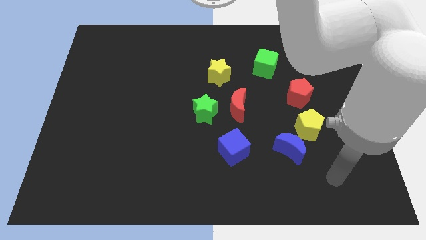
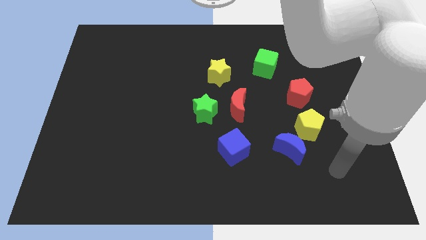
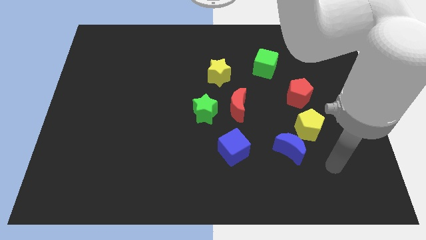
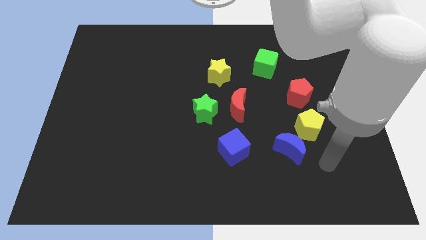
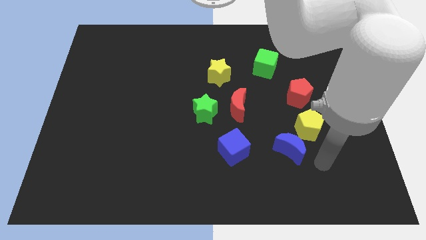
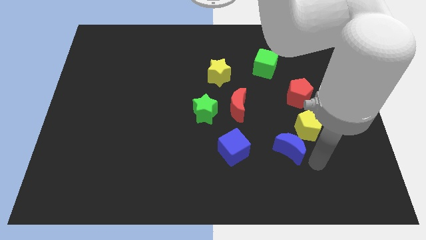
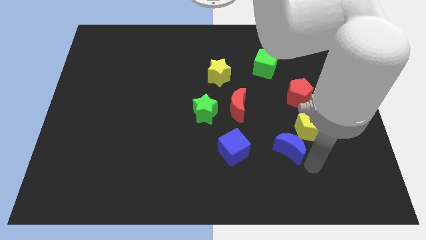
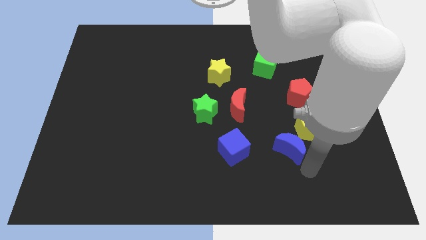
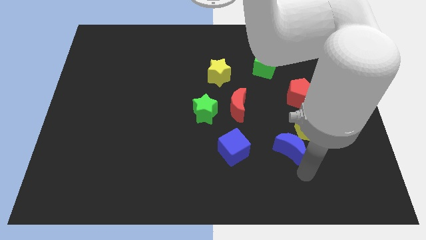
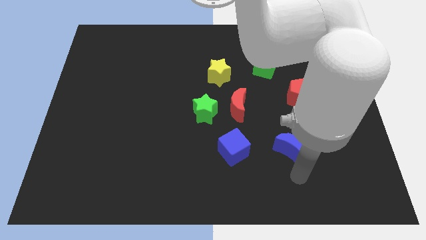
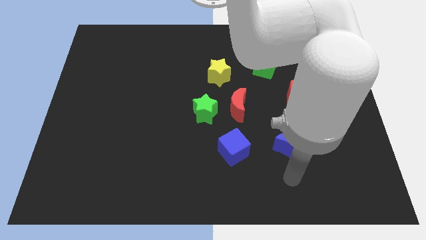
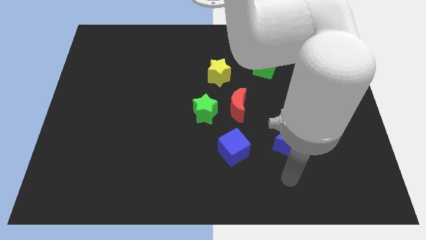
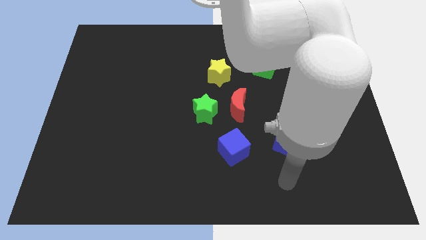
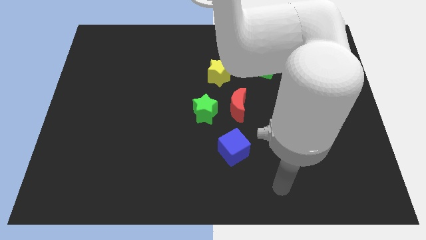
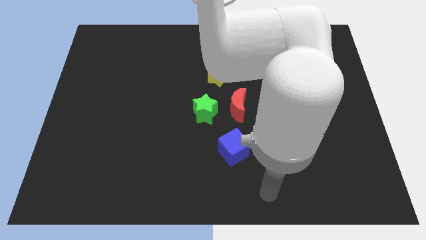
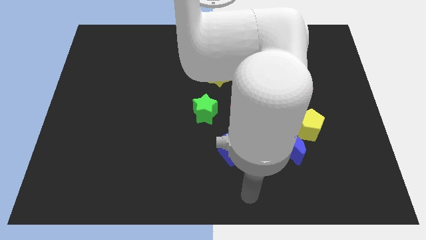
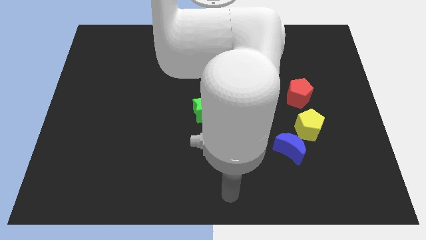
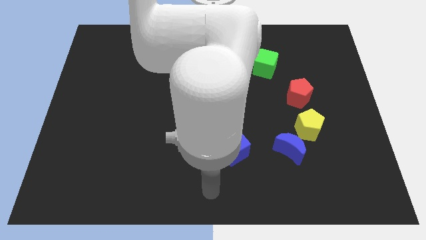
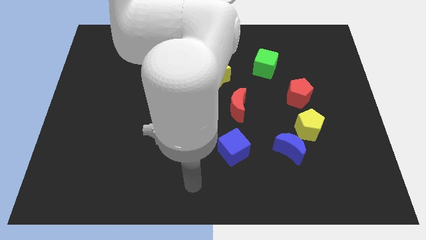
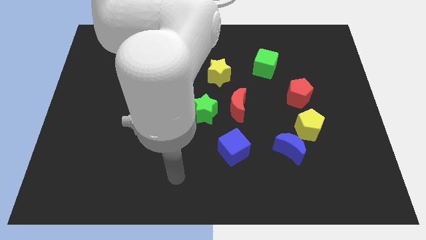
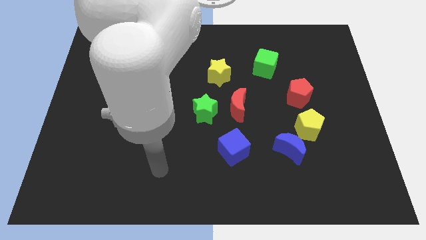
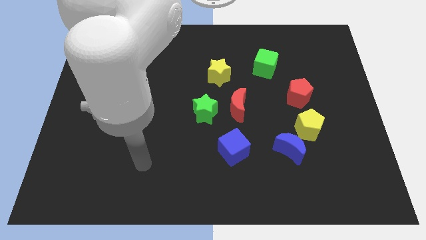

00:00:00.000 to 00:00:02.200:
place your arm at the left side of the blue cube

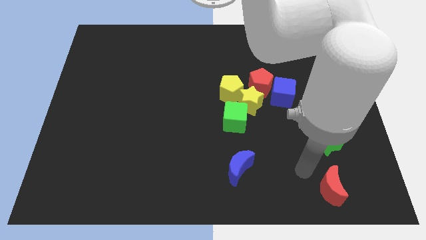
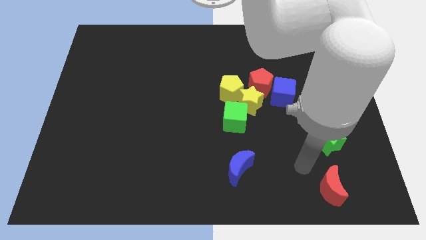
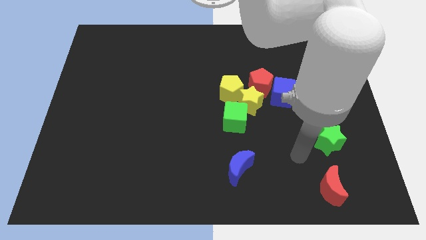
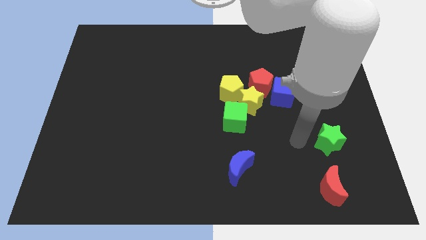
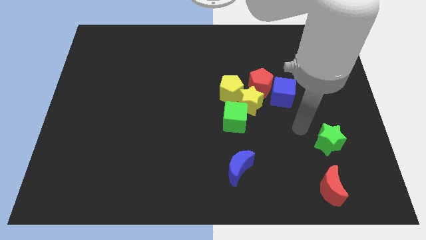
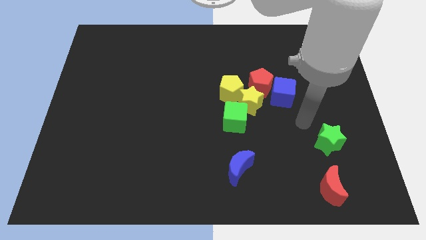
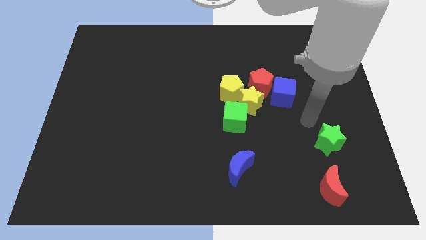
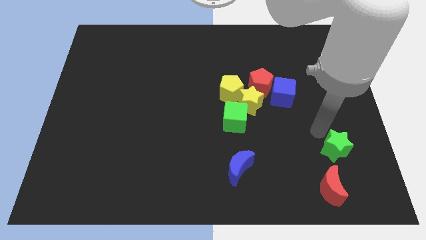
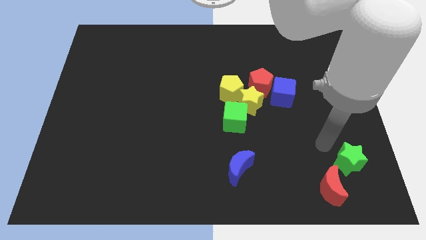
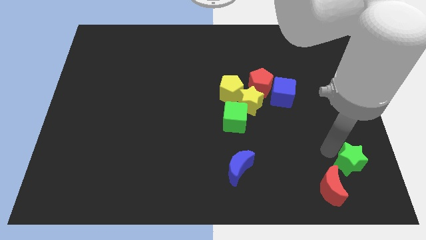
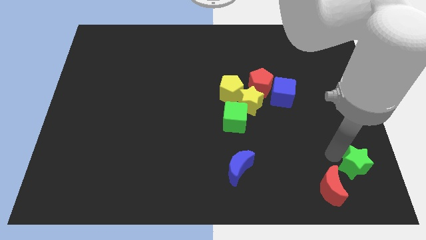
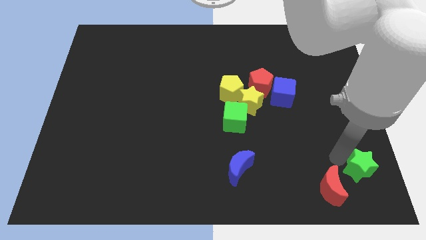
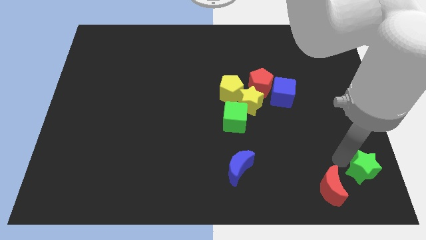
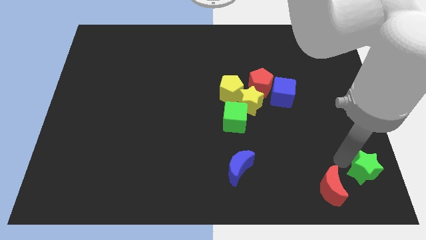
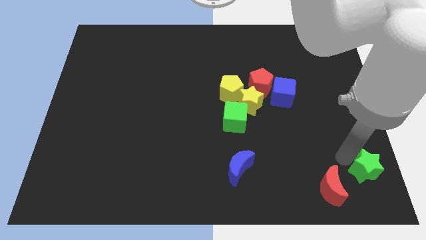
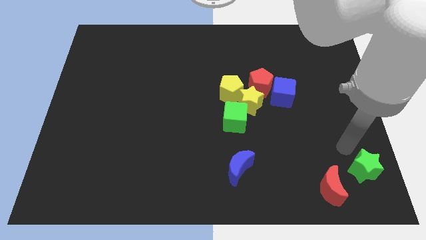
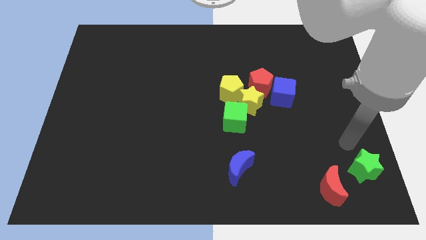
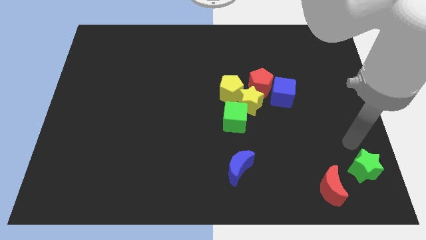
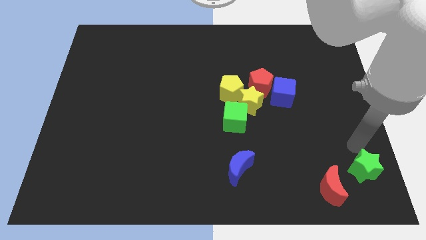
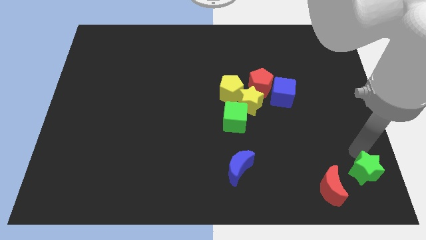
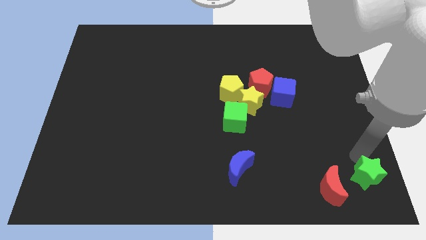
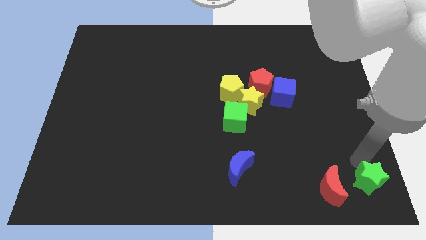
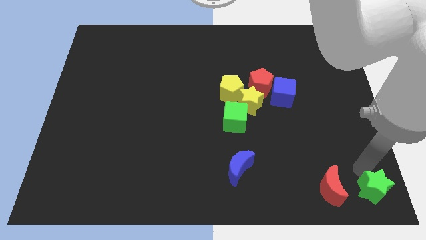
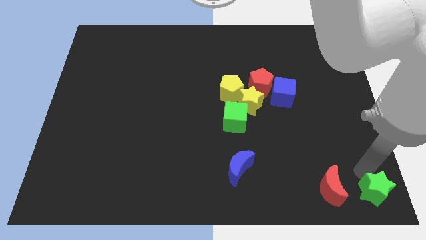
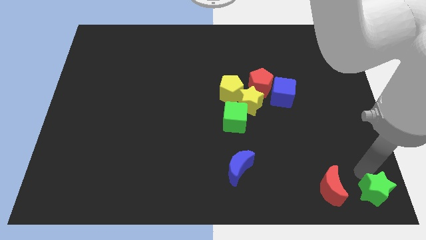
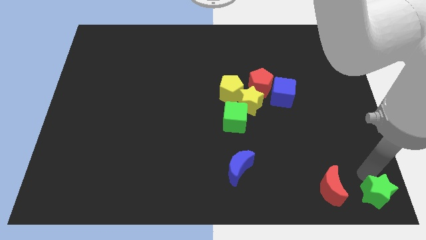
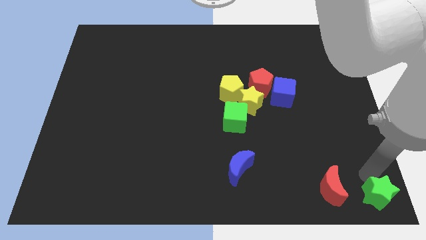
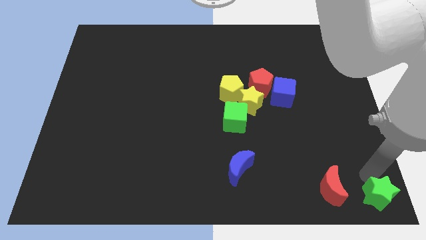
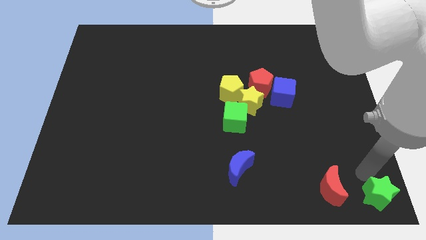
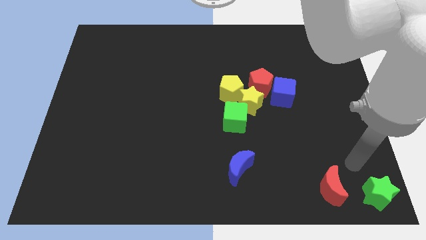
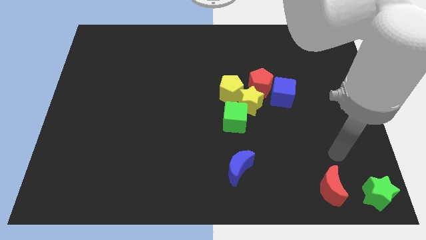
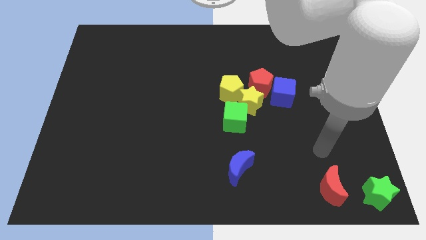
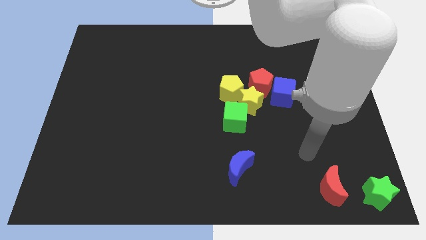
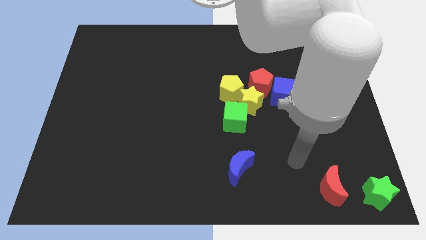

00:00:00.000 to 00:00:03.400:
place the green star at the bottom right corner of the board

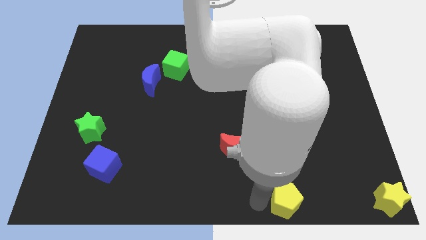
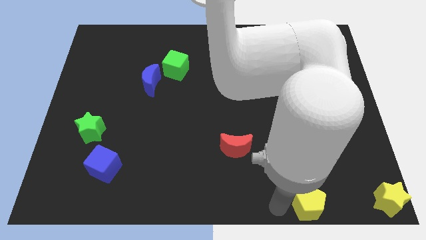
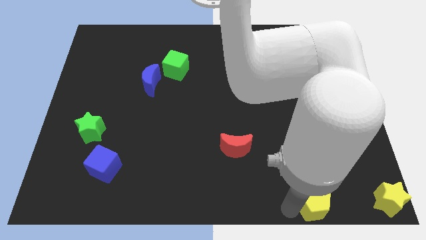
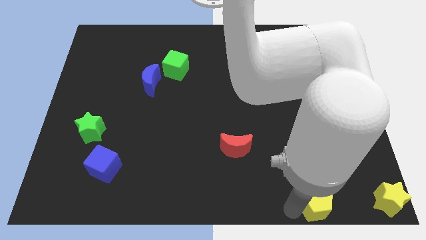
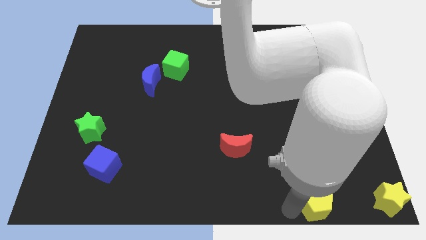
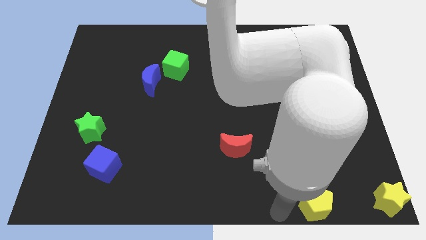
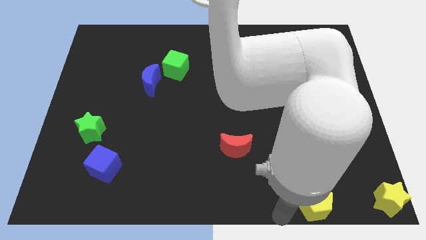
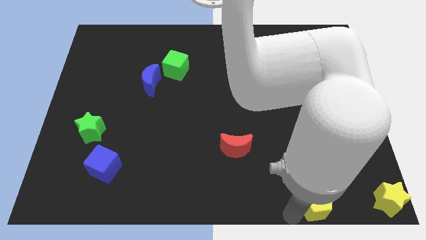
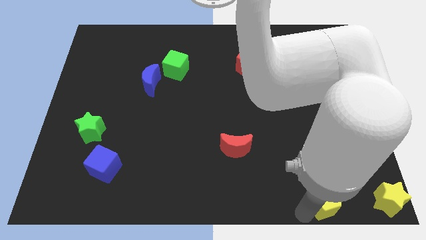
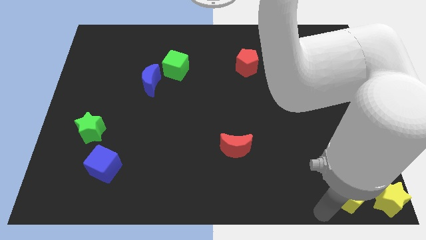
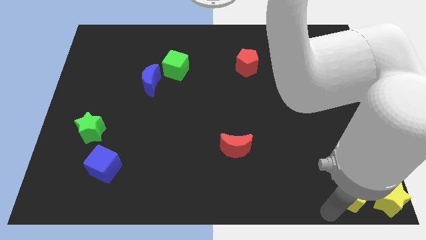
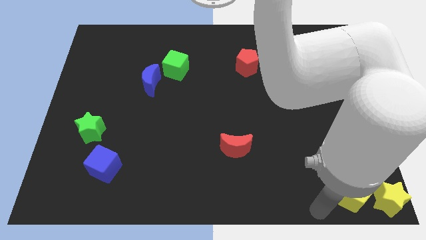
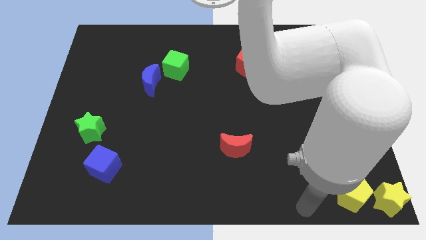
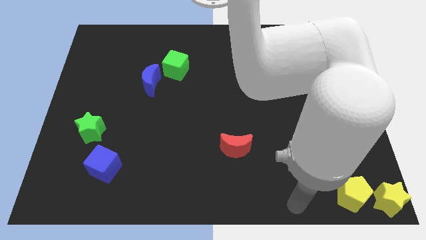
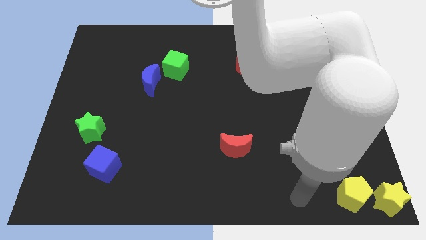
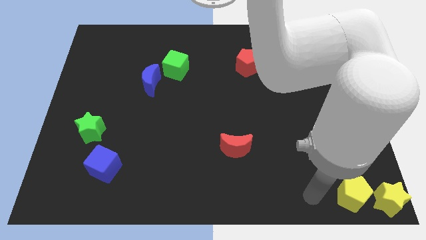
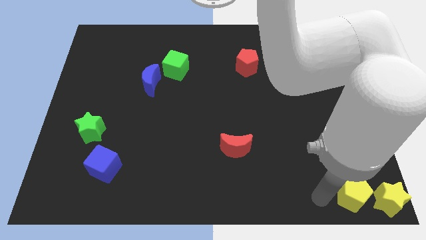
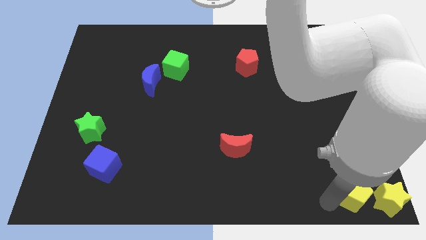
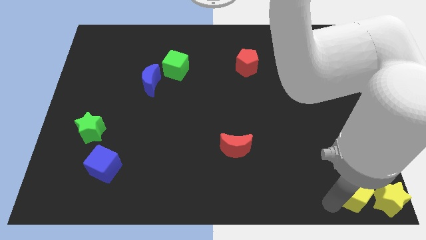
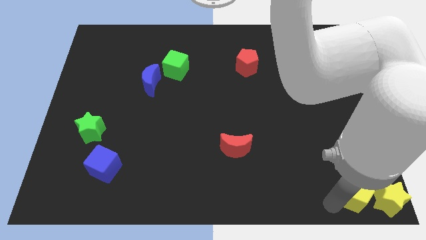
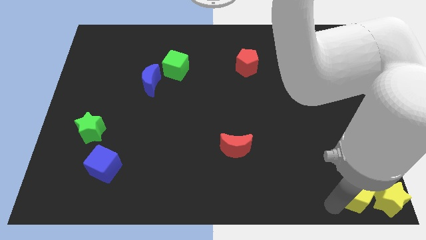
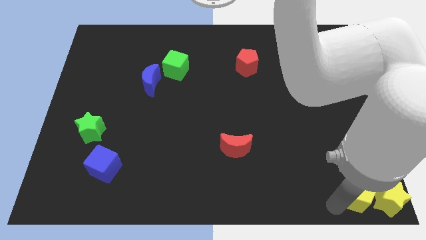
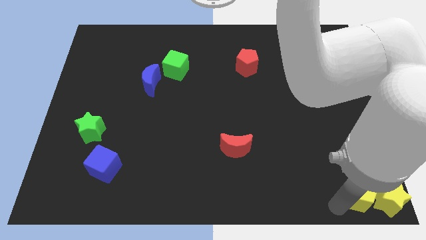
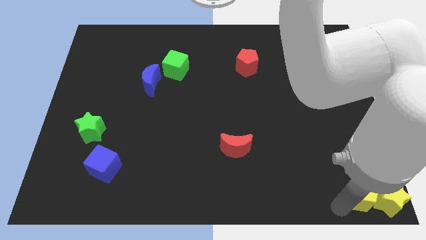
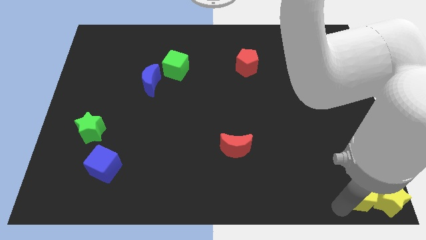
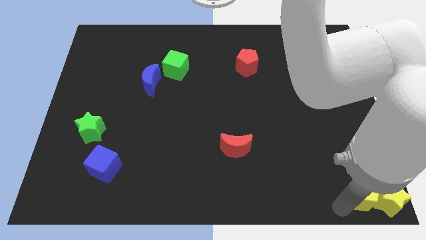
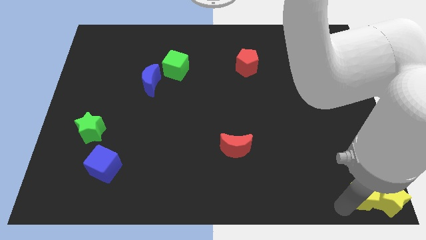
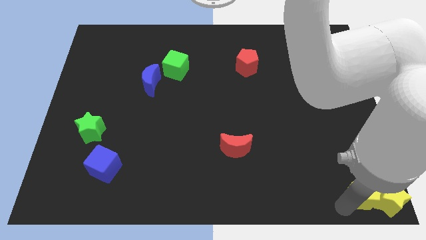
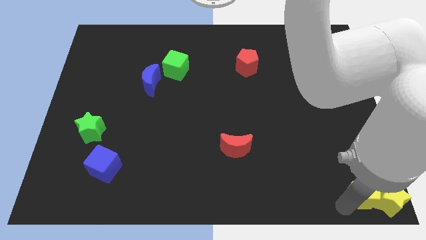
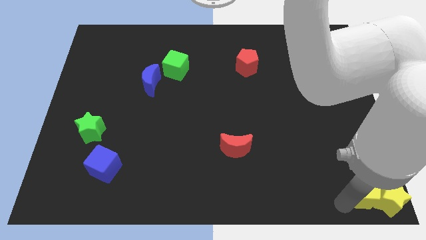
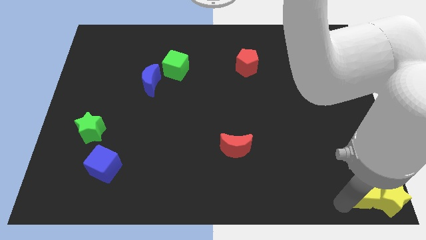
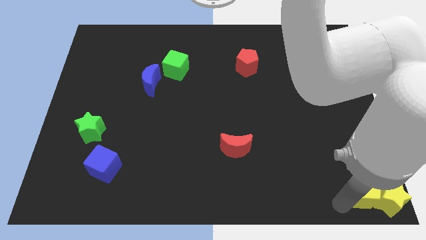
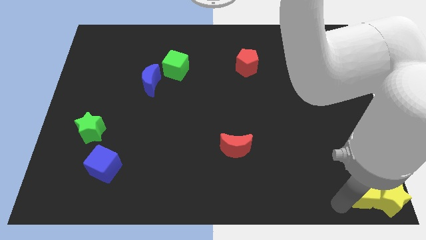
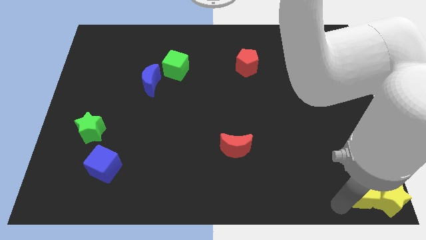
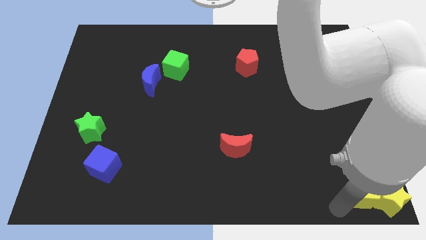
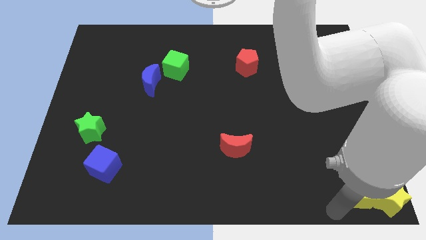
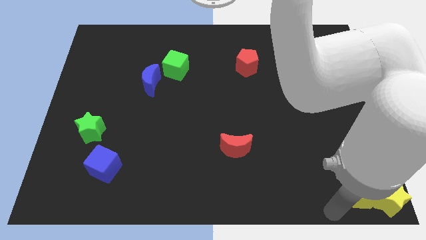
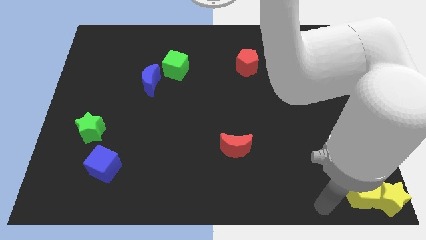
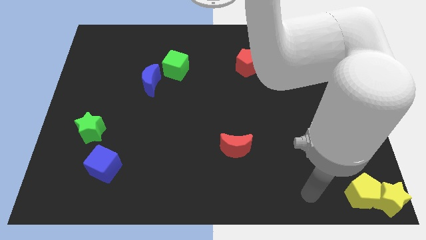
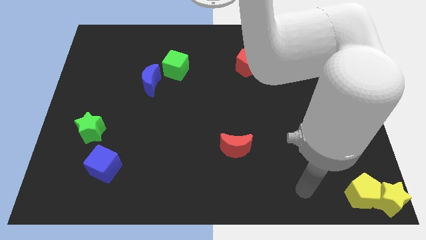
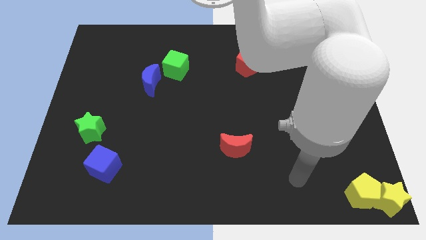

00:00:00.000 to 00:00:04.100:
move the yellow pentagon into the yellow star
